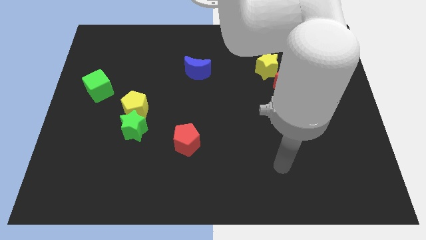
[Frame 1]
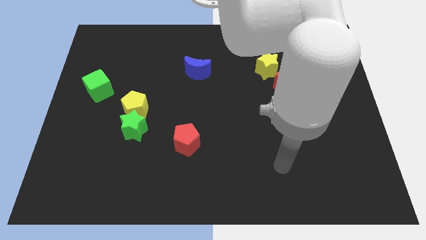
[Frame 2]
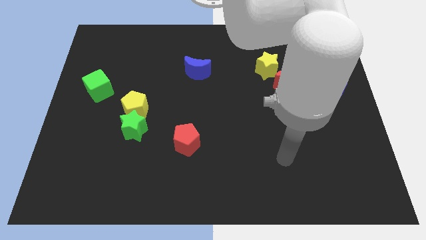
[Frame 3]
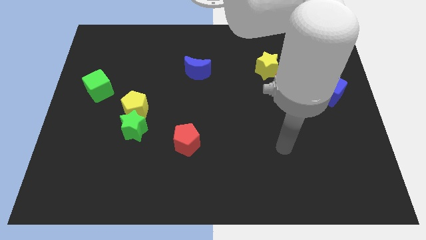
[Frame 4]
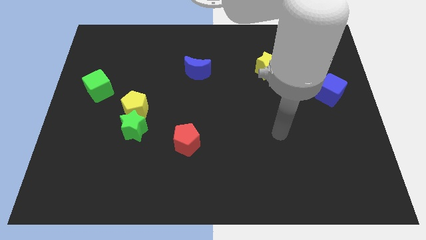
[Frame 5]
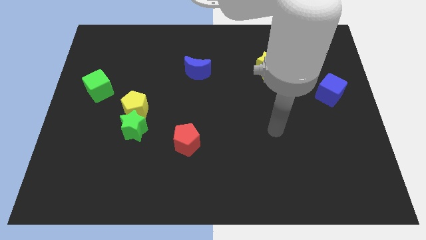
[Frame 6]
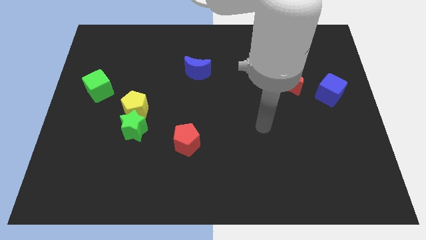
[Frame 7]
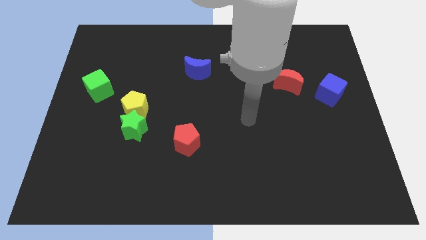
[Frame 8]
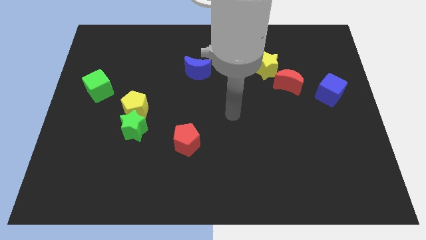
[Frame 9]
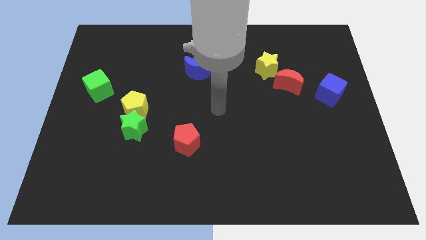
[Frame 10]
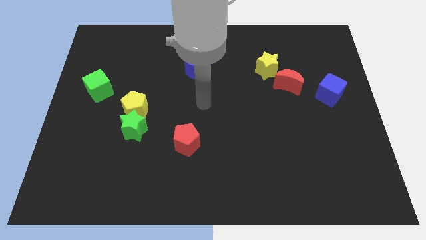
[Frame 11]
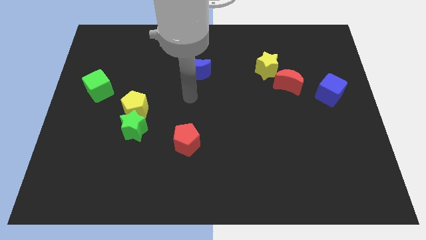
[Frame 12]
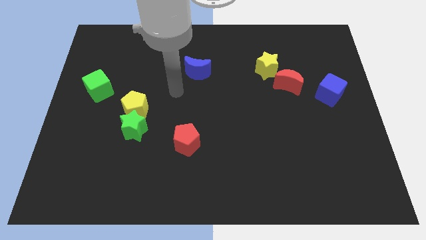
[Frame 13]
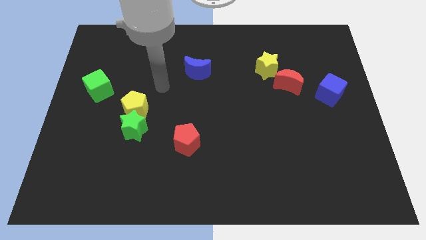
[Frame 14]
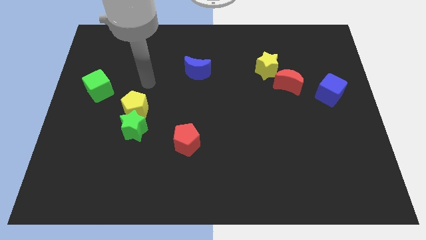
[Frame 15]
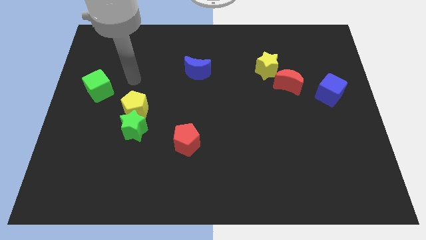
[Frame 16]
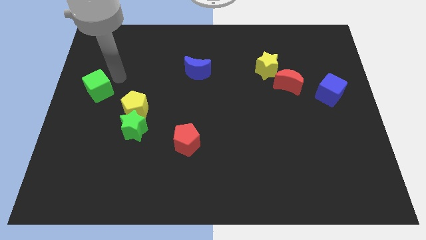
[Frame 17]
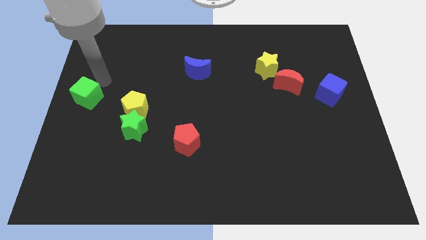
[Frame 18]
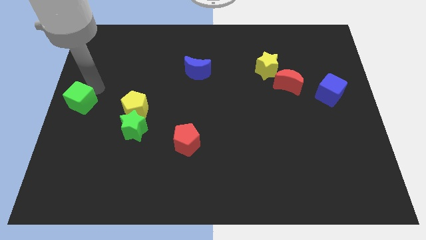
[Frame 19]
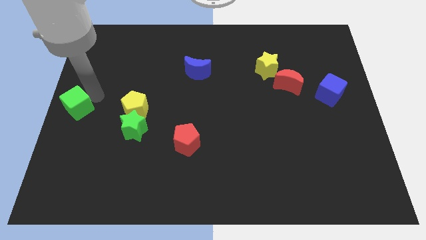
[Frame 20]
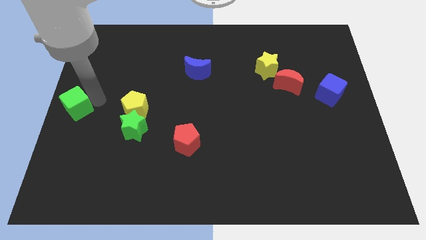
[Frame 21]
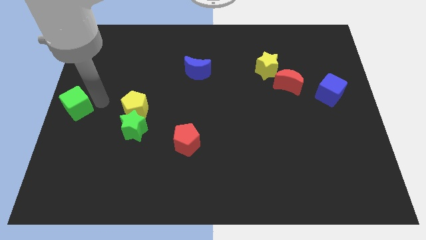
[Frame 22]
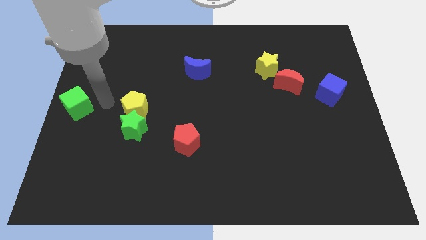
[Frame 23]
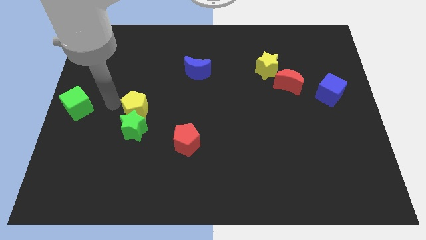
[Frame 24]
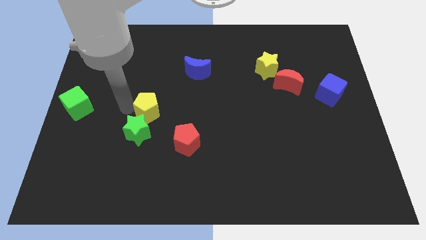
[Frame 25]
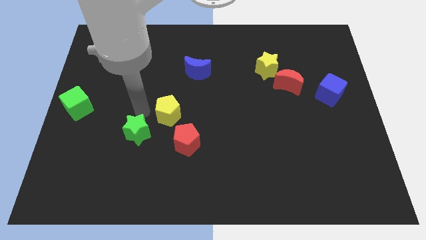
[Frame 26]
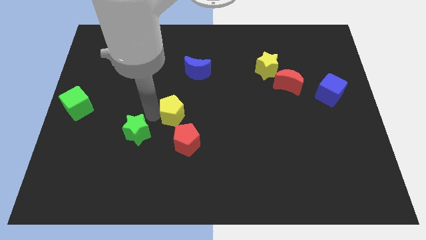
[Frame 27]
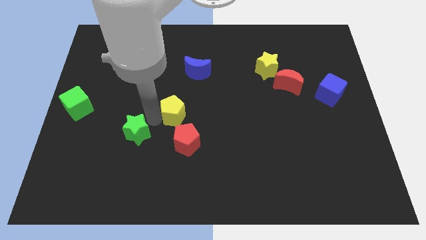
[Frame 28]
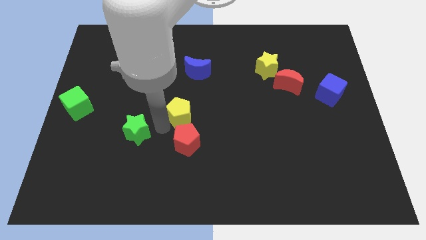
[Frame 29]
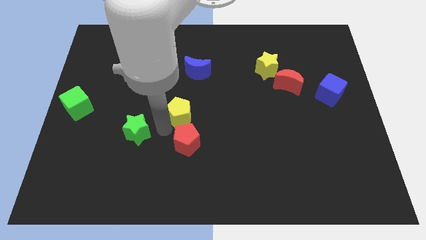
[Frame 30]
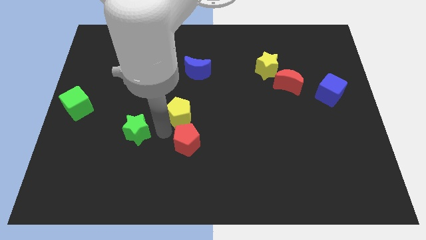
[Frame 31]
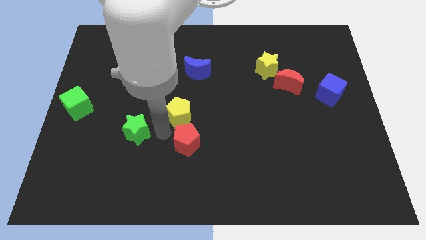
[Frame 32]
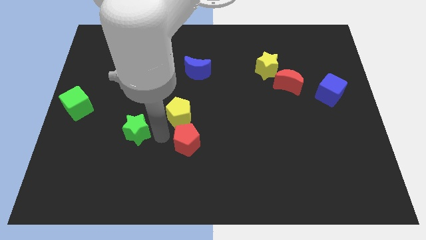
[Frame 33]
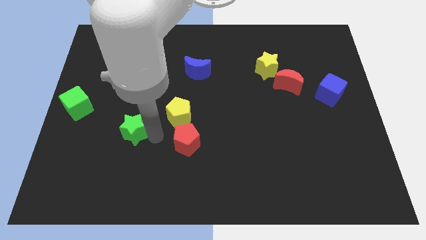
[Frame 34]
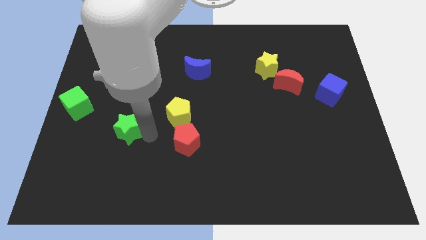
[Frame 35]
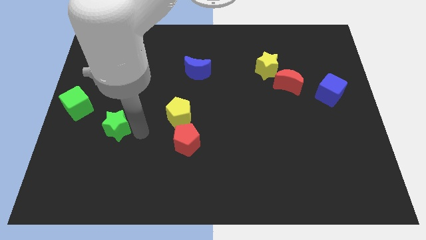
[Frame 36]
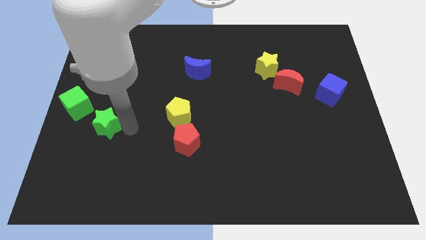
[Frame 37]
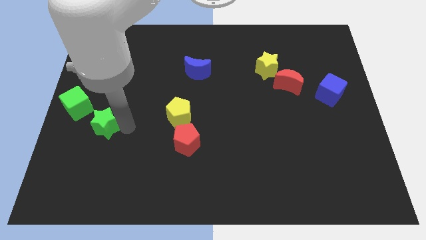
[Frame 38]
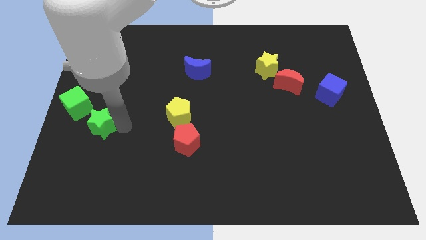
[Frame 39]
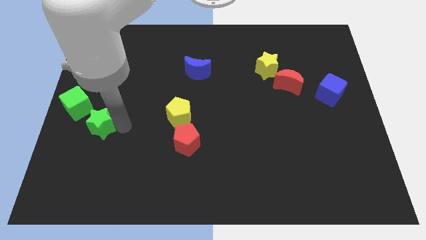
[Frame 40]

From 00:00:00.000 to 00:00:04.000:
slightly move the yellow pentagon to the right of the board

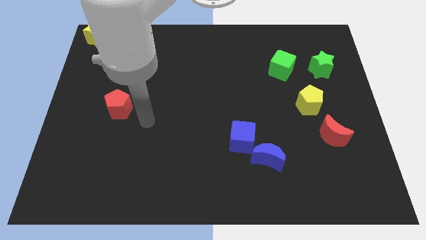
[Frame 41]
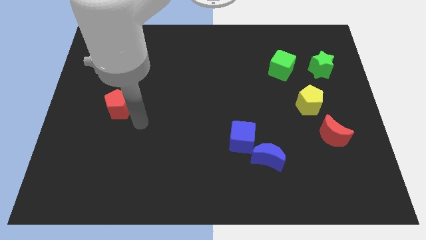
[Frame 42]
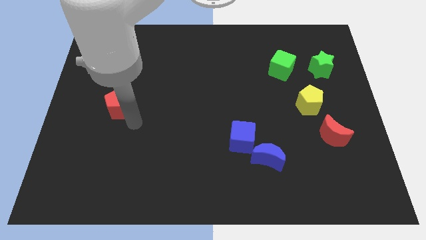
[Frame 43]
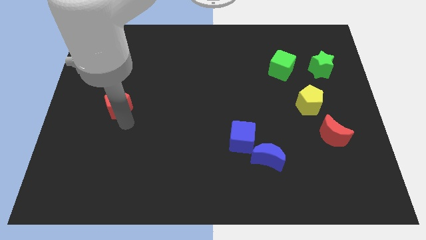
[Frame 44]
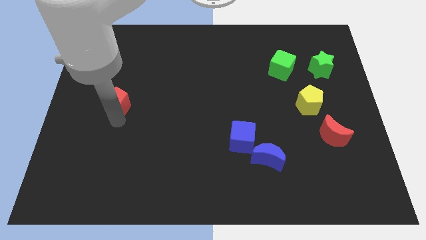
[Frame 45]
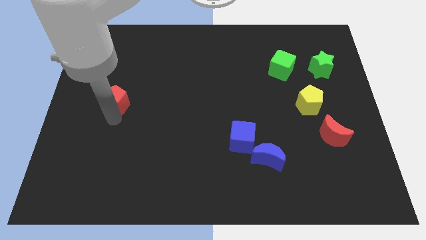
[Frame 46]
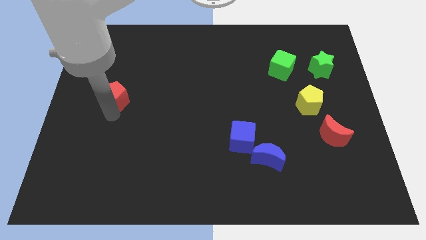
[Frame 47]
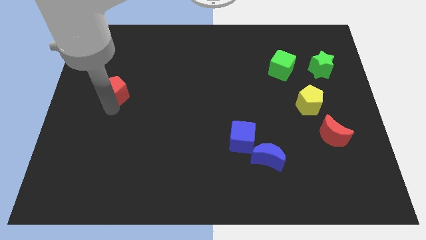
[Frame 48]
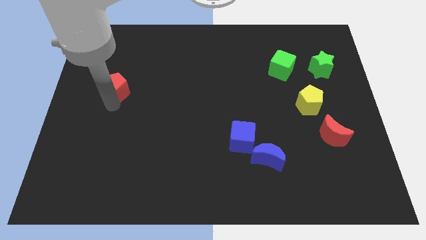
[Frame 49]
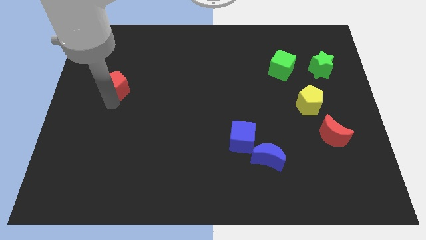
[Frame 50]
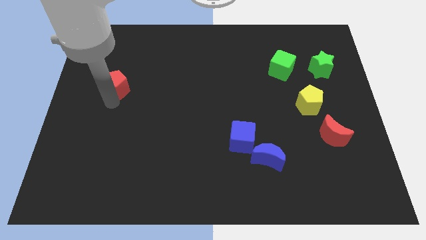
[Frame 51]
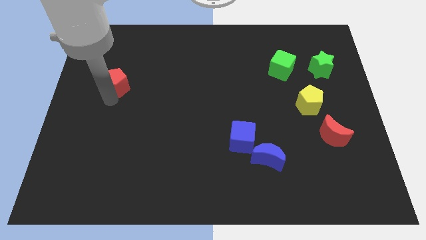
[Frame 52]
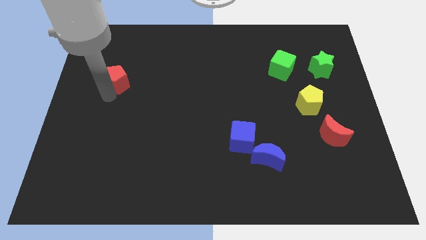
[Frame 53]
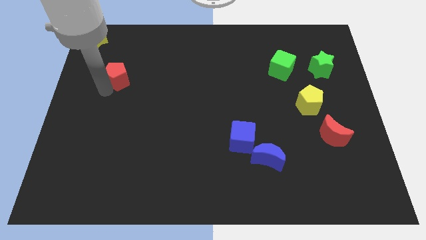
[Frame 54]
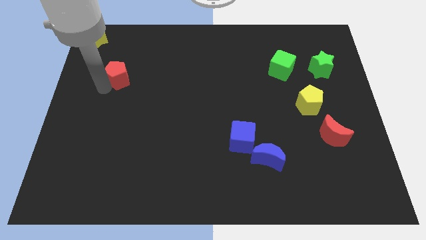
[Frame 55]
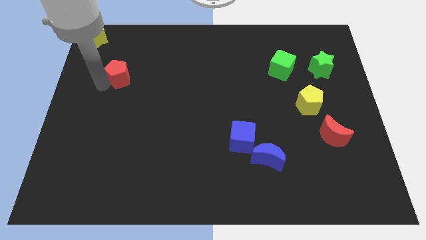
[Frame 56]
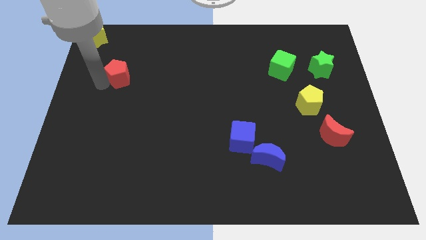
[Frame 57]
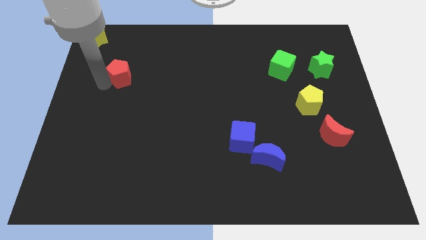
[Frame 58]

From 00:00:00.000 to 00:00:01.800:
push the red pentagon slightly to the top

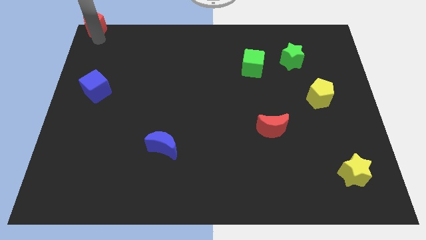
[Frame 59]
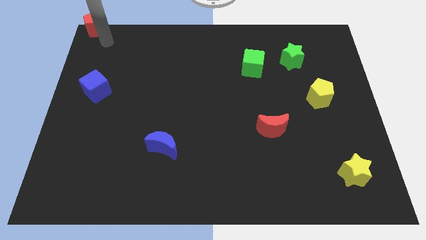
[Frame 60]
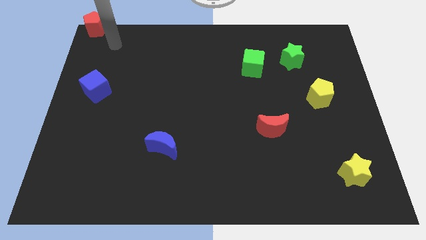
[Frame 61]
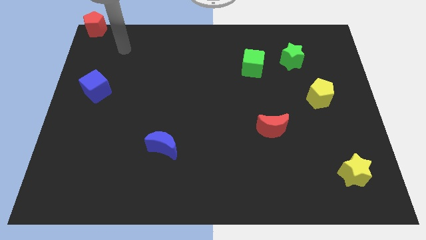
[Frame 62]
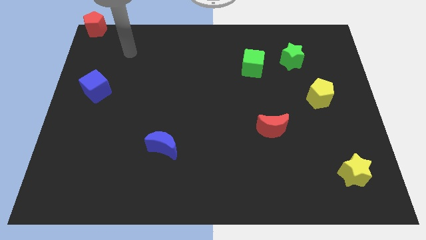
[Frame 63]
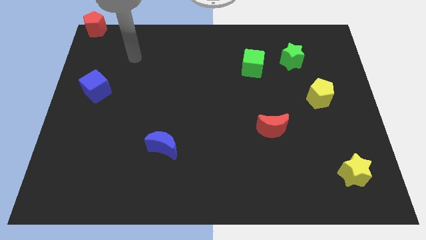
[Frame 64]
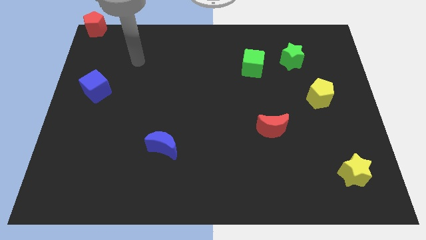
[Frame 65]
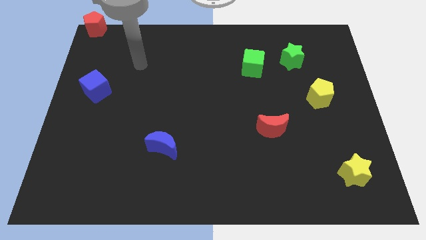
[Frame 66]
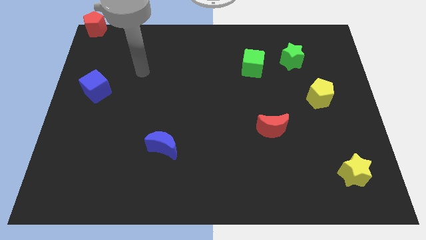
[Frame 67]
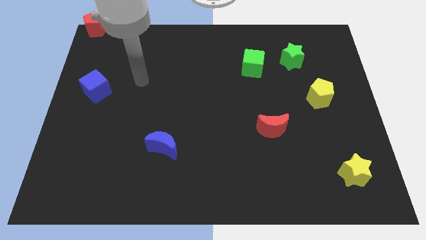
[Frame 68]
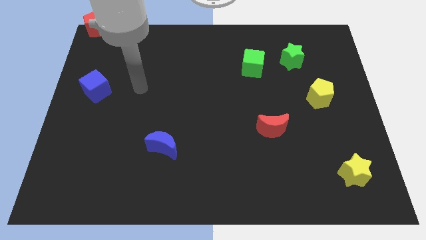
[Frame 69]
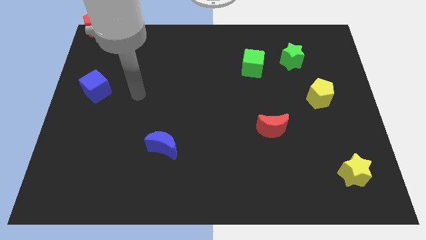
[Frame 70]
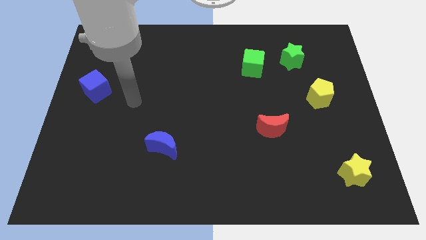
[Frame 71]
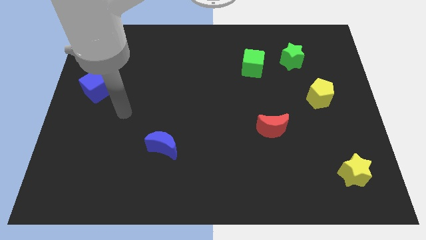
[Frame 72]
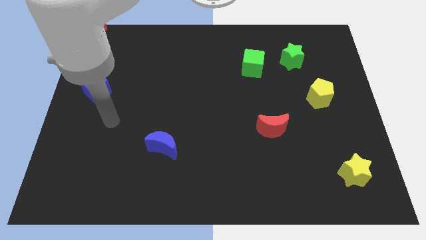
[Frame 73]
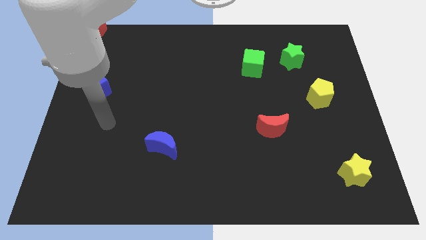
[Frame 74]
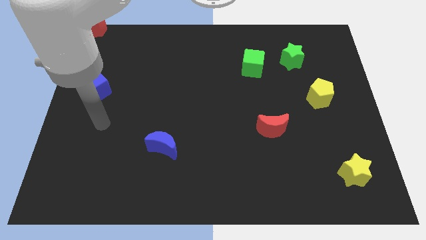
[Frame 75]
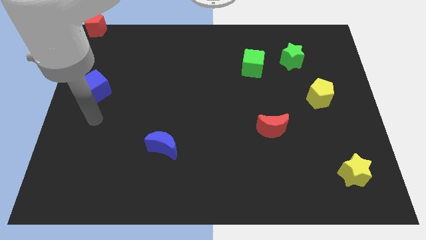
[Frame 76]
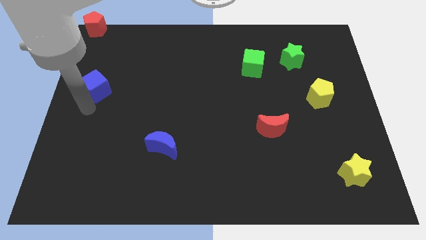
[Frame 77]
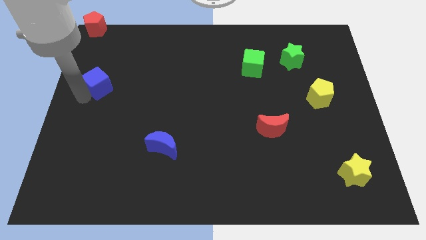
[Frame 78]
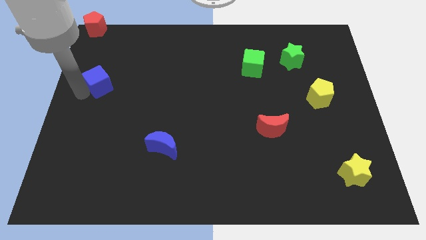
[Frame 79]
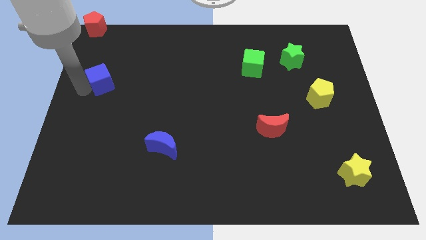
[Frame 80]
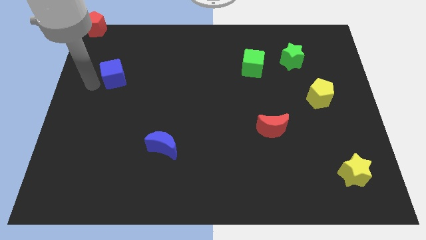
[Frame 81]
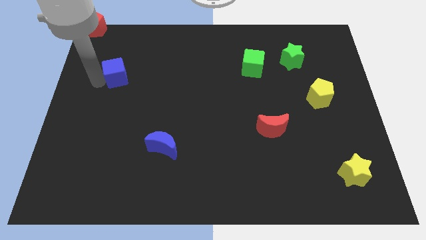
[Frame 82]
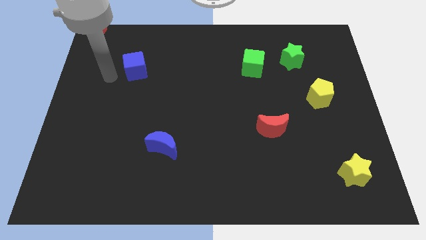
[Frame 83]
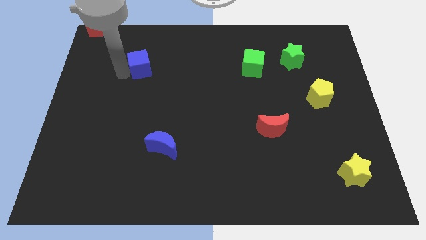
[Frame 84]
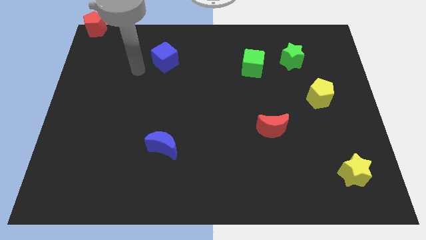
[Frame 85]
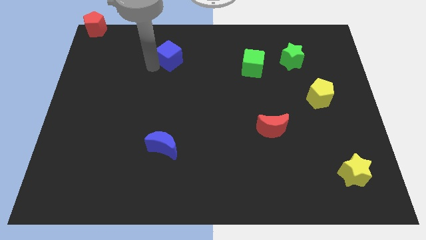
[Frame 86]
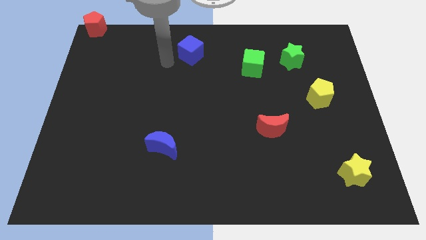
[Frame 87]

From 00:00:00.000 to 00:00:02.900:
push the blue cube top of the blue moon

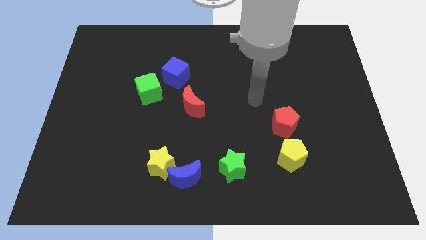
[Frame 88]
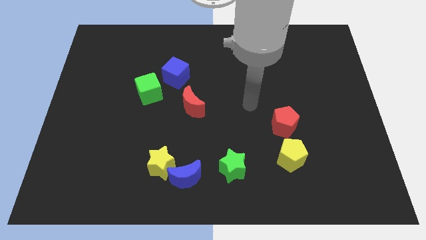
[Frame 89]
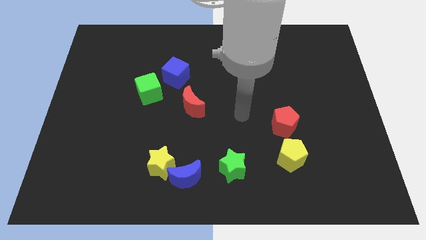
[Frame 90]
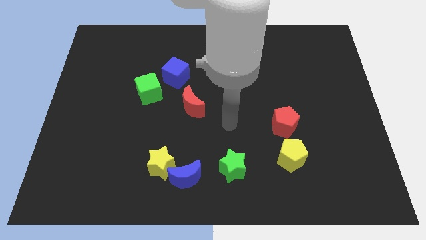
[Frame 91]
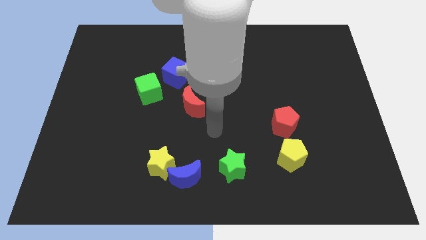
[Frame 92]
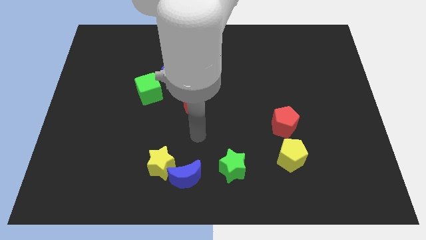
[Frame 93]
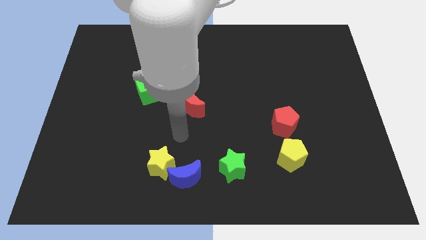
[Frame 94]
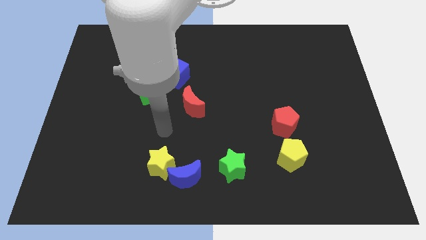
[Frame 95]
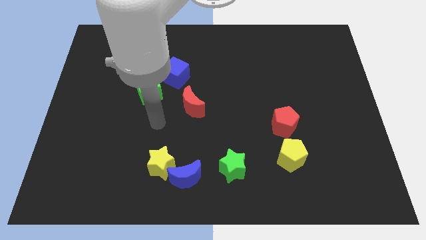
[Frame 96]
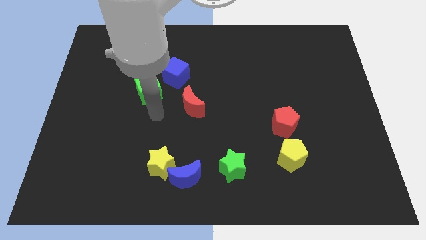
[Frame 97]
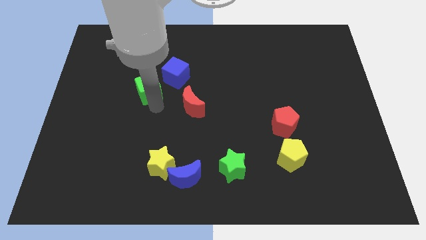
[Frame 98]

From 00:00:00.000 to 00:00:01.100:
place your arm to the bottom of green cube
